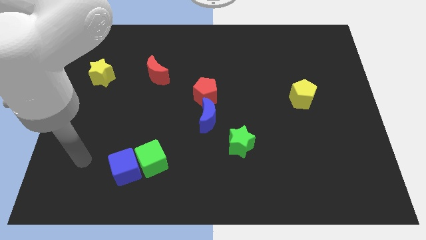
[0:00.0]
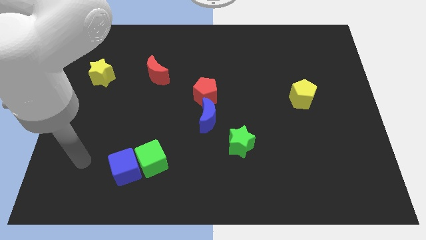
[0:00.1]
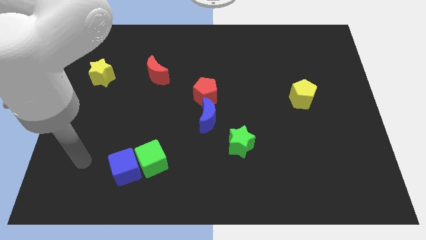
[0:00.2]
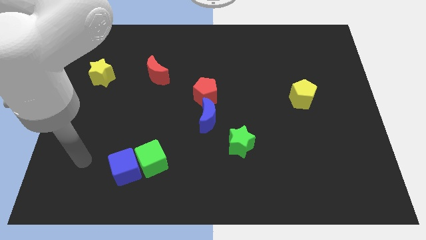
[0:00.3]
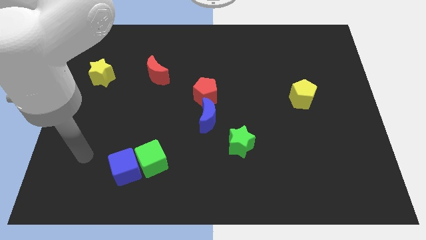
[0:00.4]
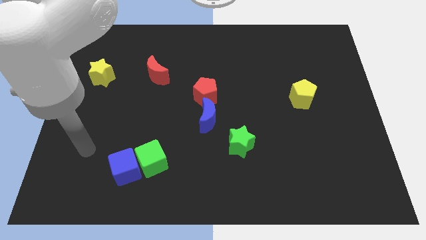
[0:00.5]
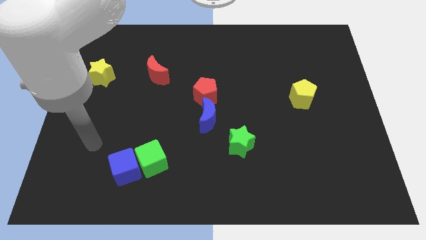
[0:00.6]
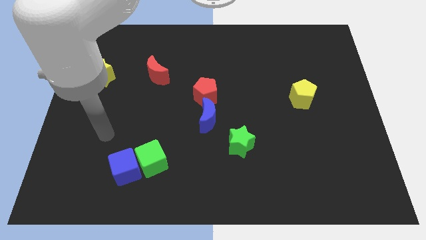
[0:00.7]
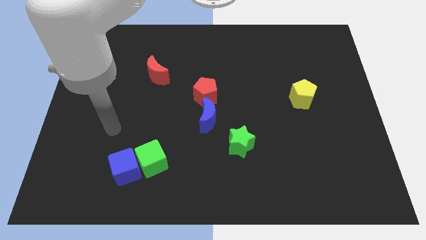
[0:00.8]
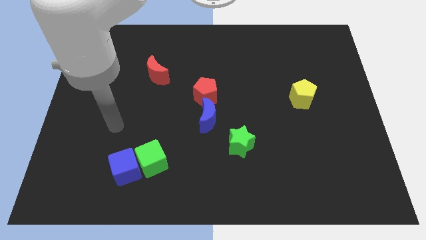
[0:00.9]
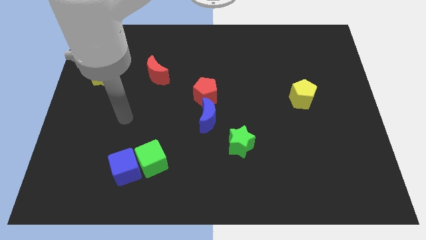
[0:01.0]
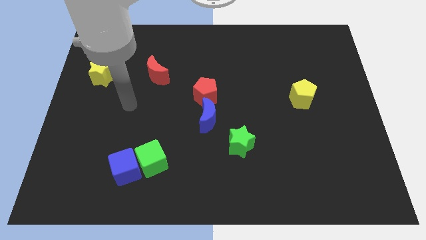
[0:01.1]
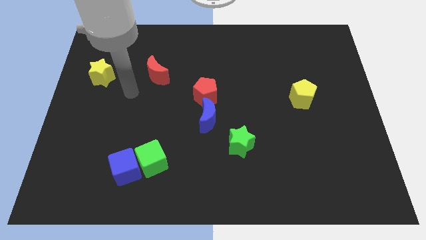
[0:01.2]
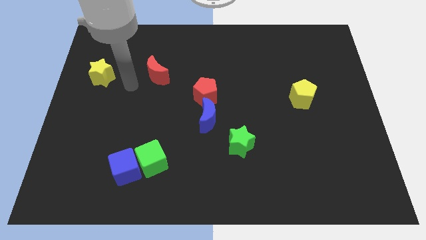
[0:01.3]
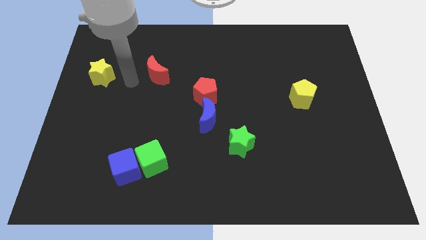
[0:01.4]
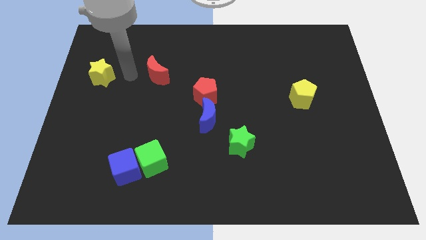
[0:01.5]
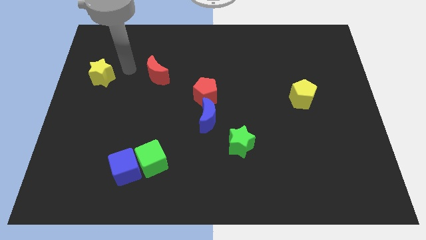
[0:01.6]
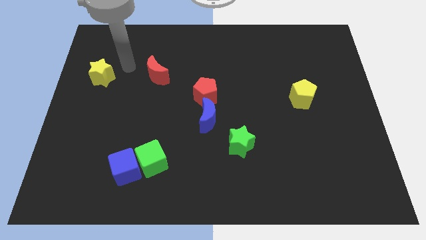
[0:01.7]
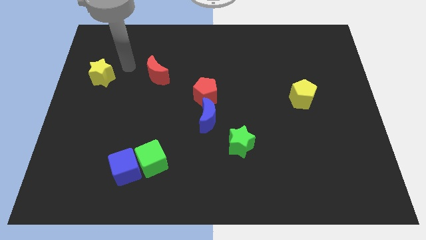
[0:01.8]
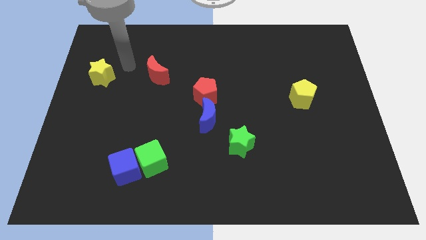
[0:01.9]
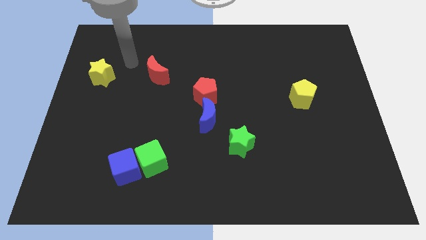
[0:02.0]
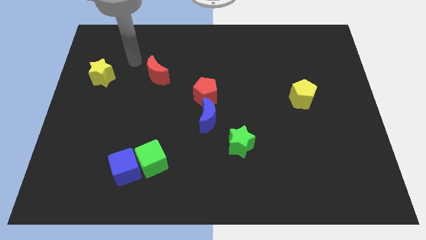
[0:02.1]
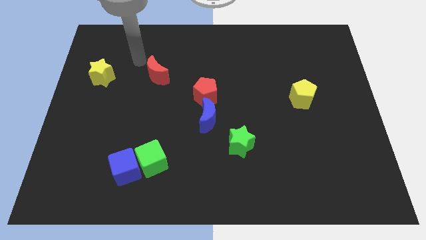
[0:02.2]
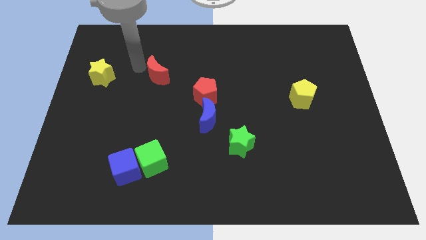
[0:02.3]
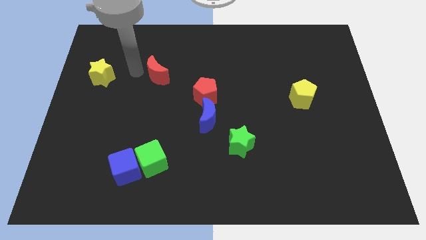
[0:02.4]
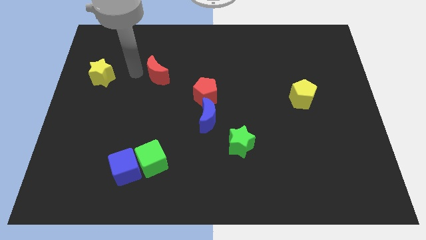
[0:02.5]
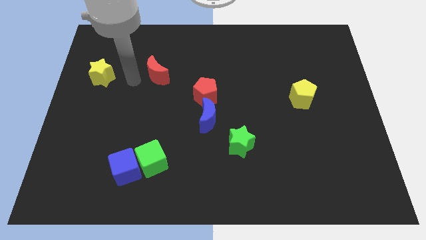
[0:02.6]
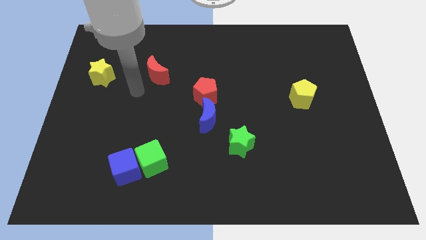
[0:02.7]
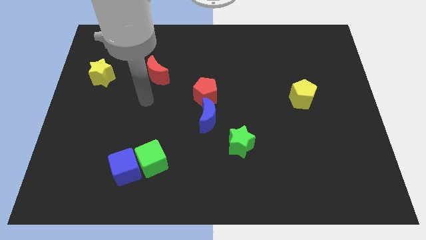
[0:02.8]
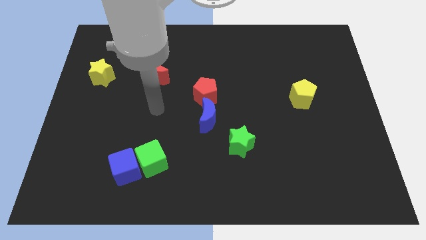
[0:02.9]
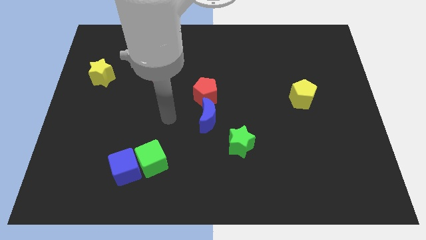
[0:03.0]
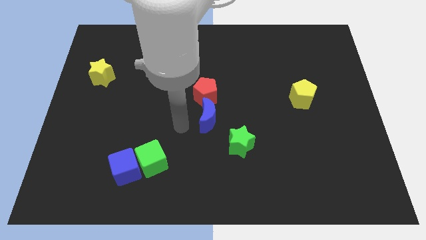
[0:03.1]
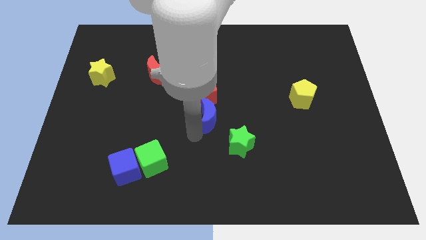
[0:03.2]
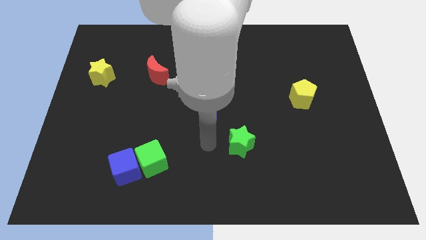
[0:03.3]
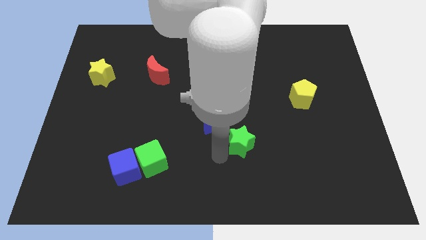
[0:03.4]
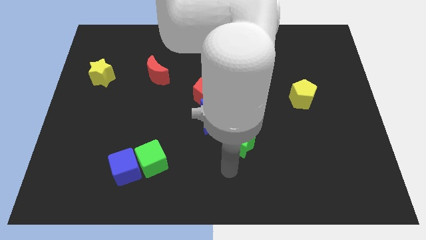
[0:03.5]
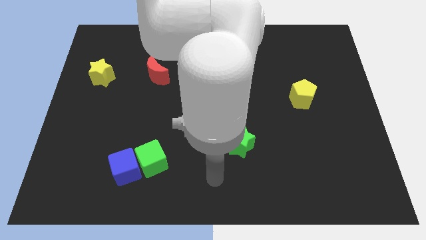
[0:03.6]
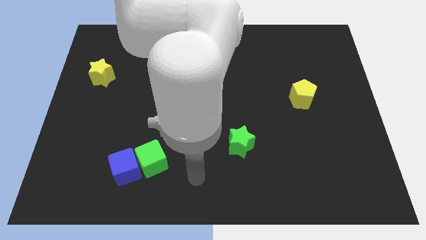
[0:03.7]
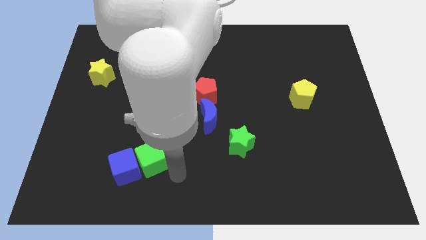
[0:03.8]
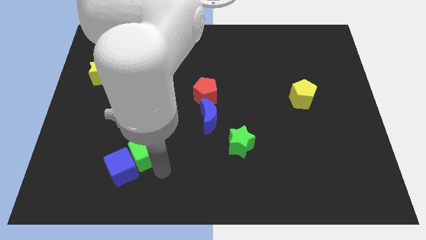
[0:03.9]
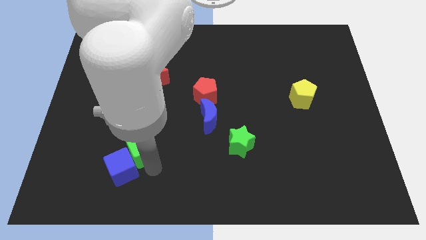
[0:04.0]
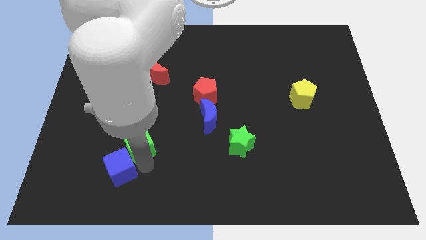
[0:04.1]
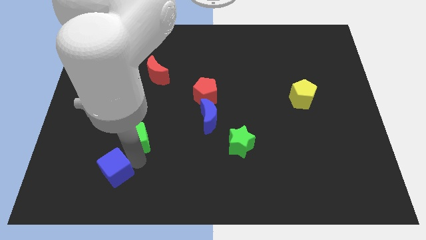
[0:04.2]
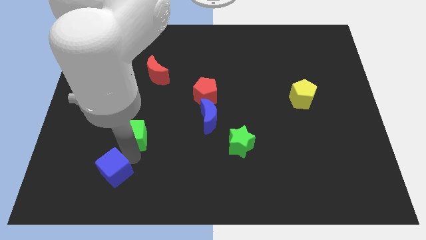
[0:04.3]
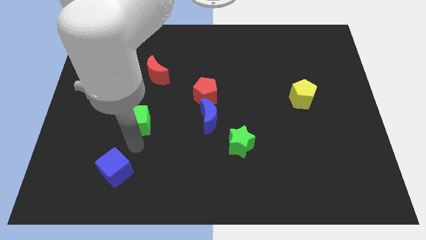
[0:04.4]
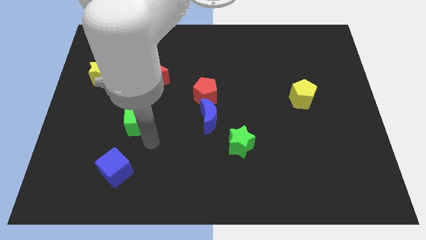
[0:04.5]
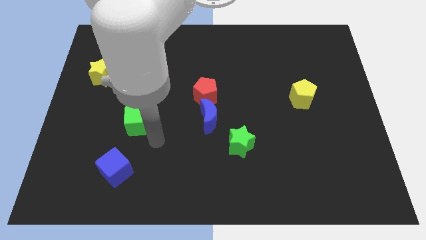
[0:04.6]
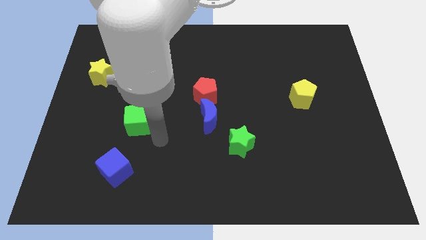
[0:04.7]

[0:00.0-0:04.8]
place the green cube parallel to the blue moon

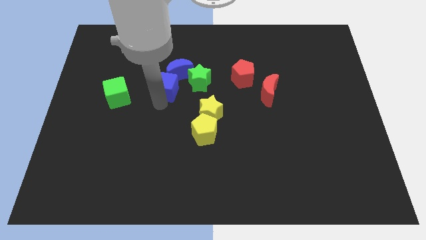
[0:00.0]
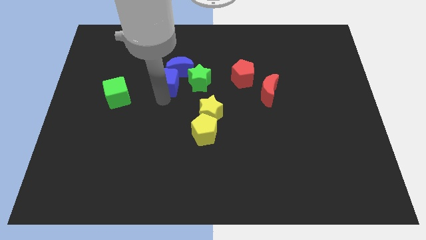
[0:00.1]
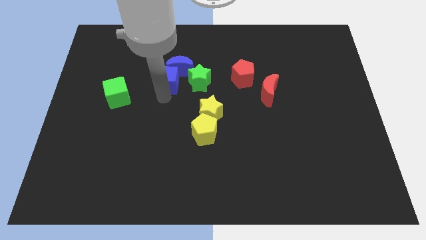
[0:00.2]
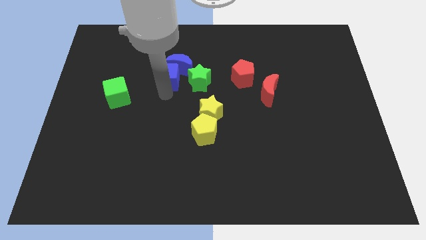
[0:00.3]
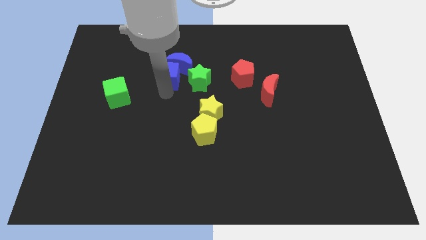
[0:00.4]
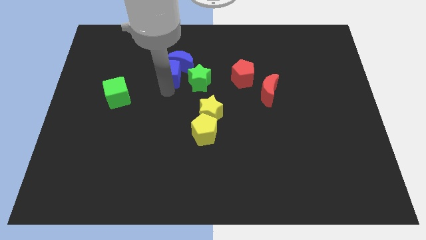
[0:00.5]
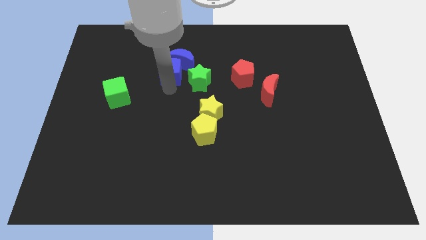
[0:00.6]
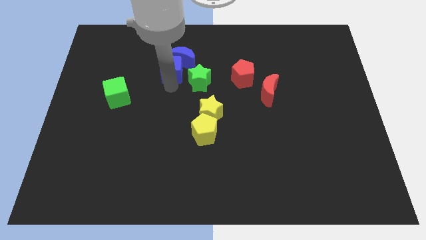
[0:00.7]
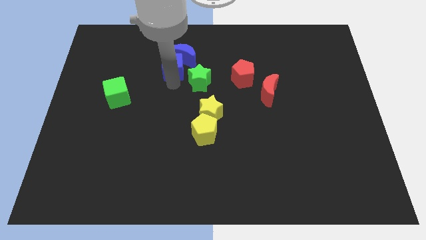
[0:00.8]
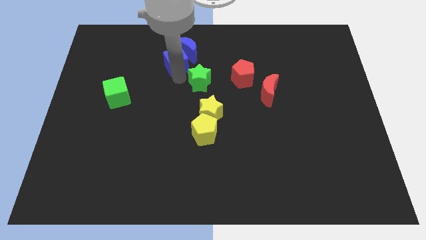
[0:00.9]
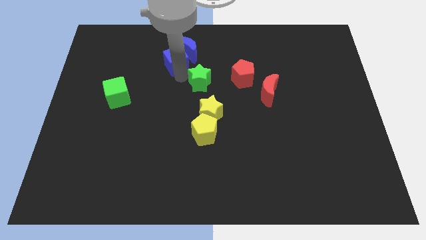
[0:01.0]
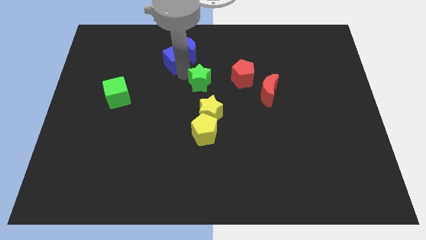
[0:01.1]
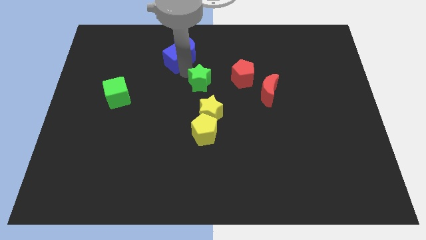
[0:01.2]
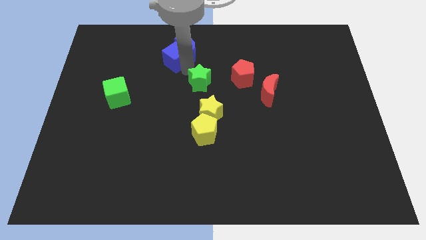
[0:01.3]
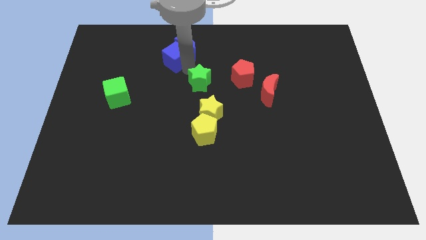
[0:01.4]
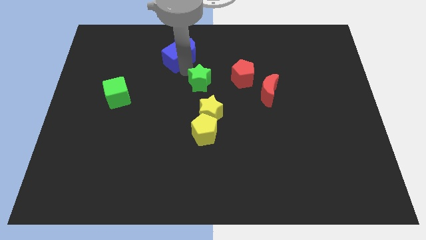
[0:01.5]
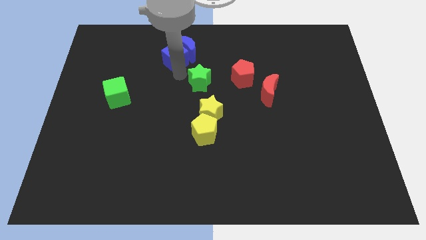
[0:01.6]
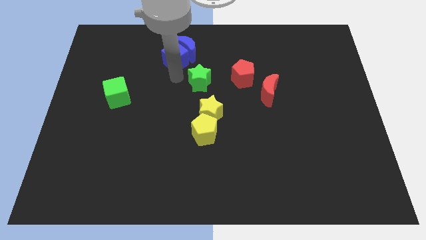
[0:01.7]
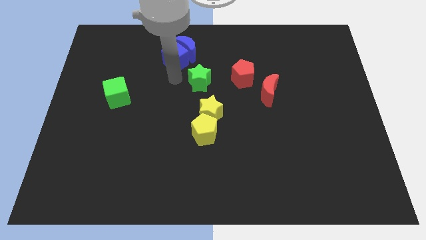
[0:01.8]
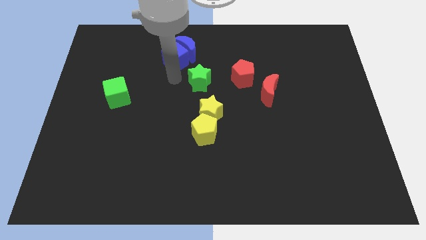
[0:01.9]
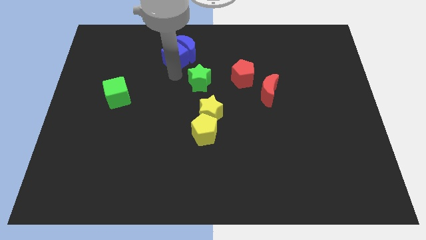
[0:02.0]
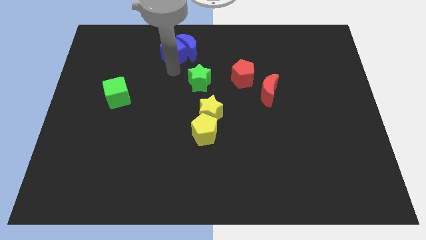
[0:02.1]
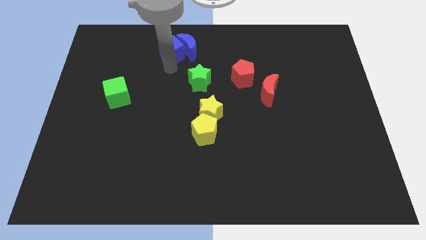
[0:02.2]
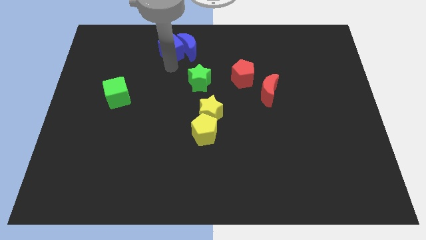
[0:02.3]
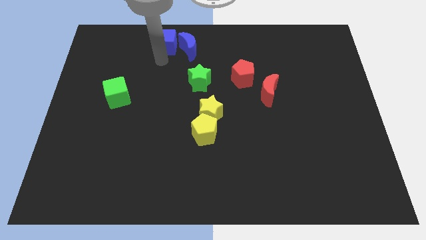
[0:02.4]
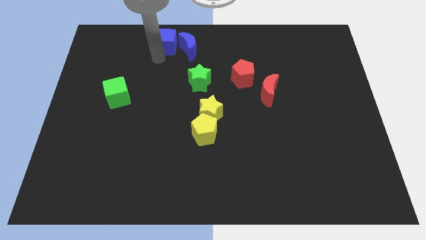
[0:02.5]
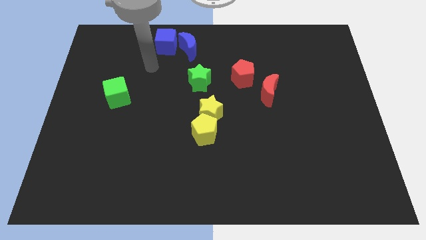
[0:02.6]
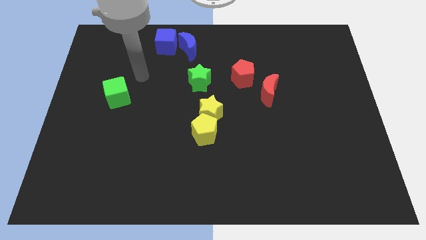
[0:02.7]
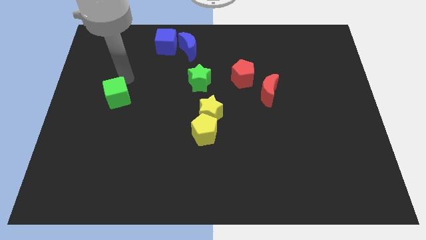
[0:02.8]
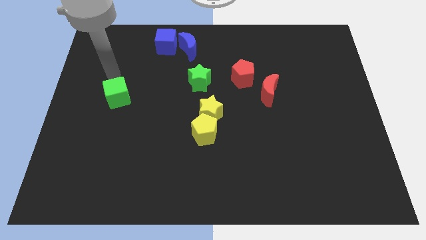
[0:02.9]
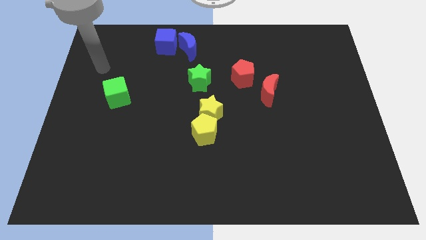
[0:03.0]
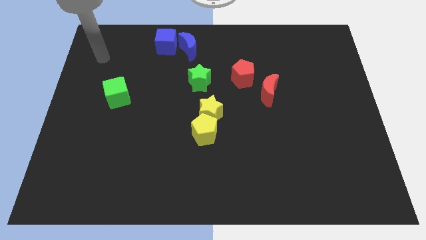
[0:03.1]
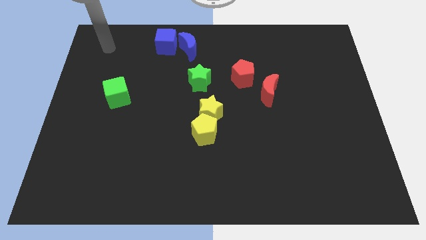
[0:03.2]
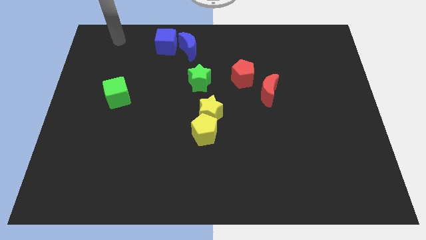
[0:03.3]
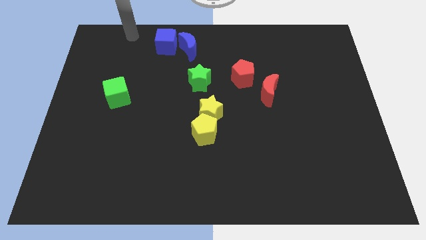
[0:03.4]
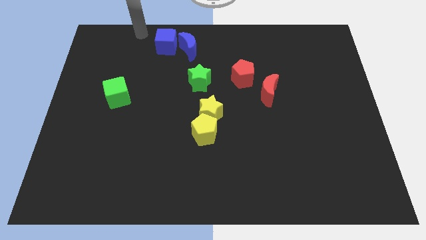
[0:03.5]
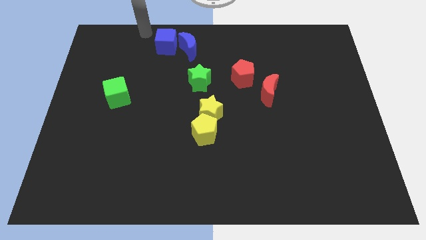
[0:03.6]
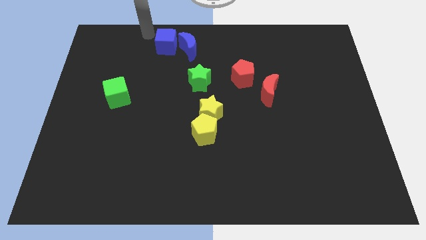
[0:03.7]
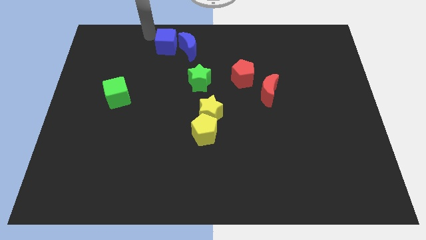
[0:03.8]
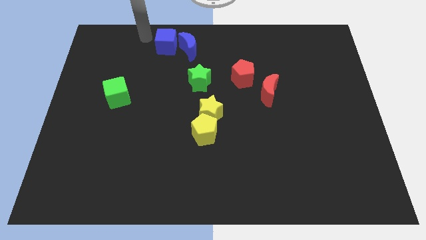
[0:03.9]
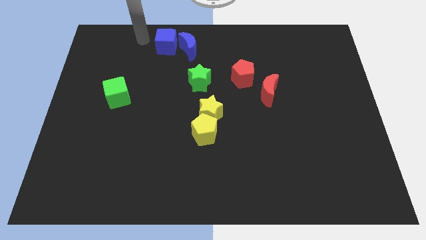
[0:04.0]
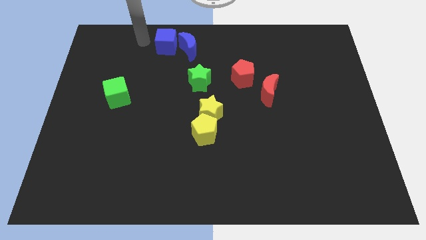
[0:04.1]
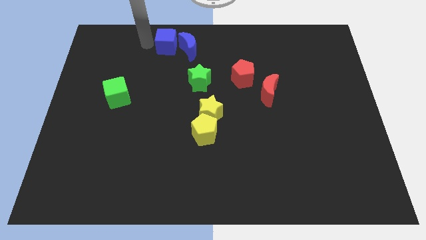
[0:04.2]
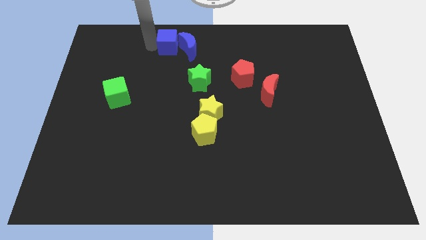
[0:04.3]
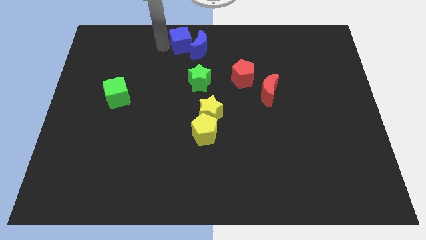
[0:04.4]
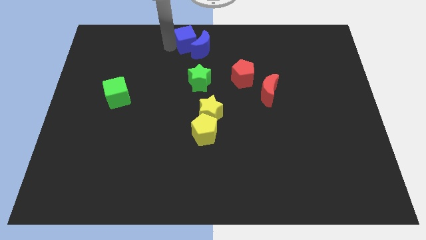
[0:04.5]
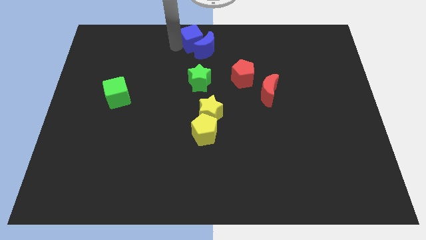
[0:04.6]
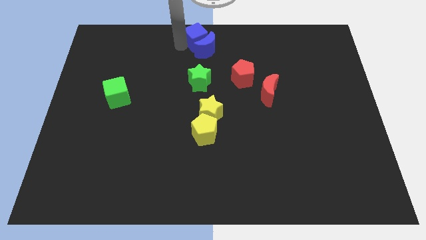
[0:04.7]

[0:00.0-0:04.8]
move the blue blocks to the top center of the board
